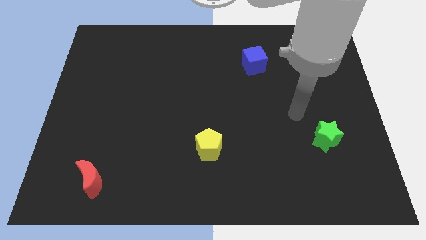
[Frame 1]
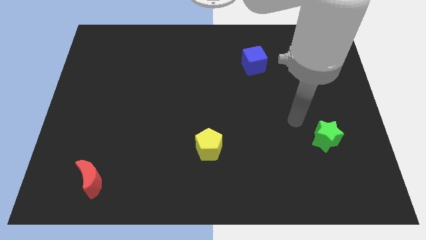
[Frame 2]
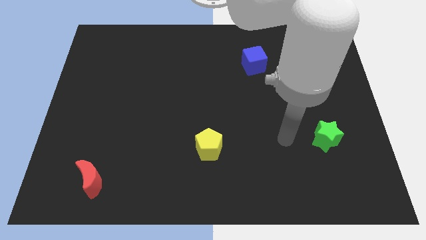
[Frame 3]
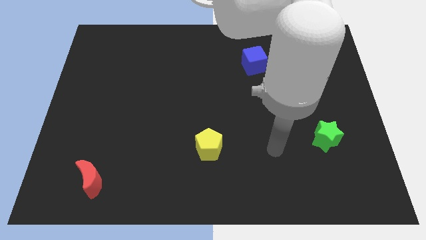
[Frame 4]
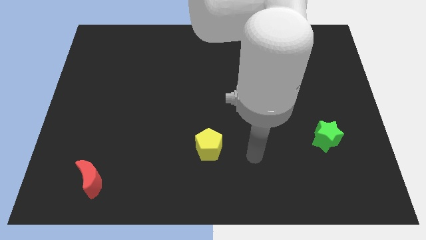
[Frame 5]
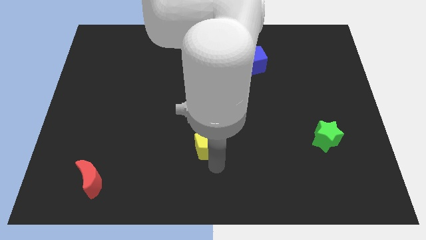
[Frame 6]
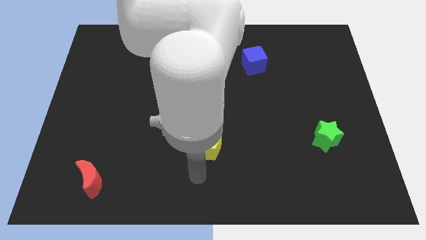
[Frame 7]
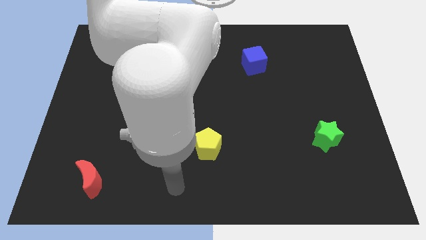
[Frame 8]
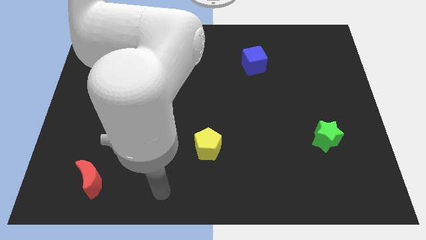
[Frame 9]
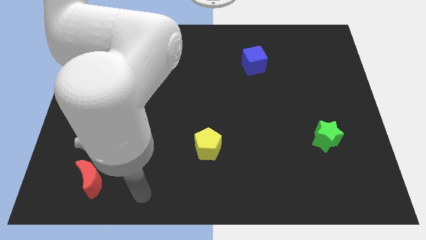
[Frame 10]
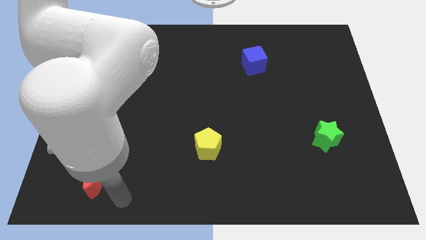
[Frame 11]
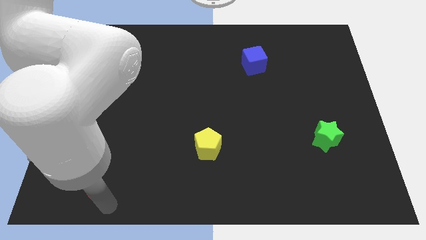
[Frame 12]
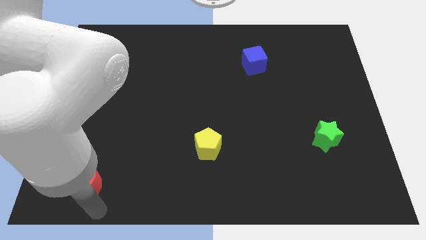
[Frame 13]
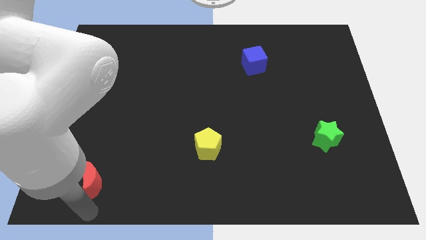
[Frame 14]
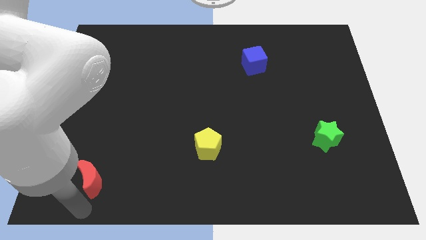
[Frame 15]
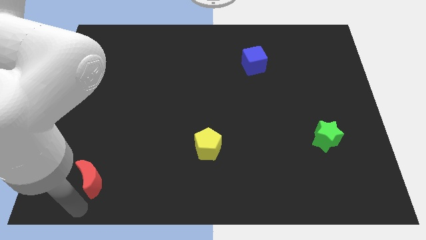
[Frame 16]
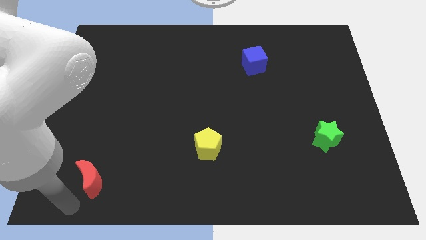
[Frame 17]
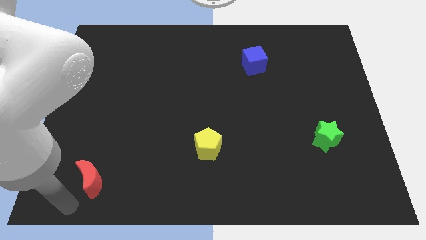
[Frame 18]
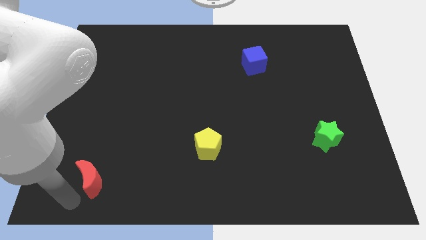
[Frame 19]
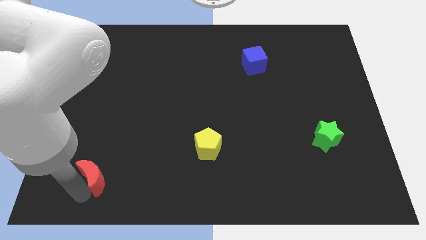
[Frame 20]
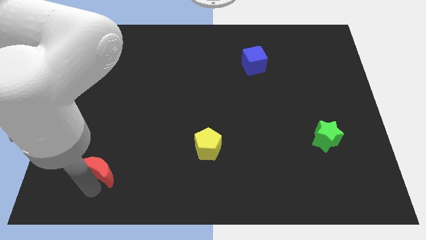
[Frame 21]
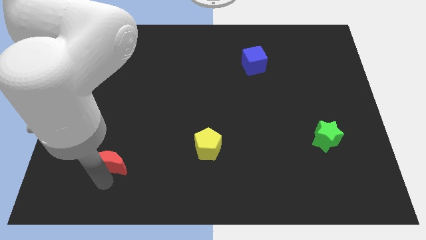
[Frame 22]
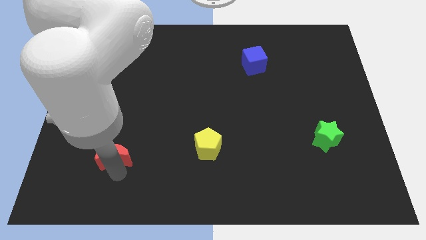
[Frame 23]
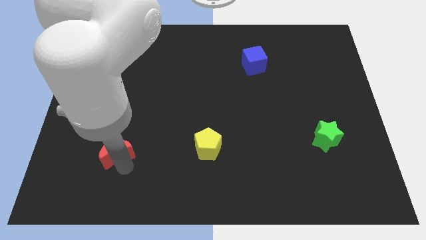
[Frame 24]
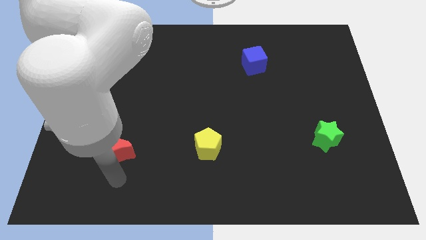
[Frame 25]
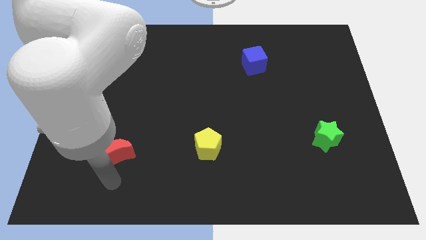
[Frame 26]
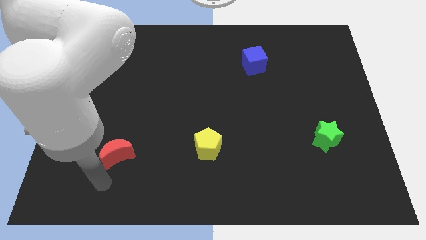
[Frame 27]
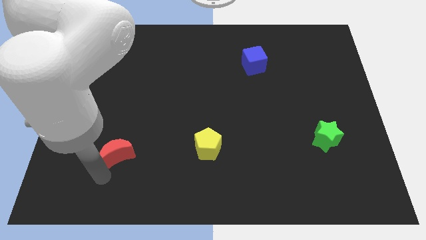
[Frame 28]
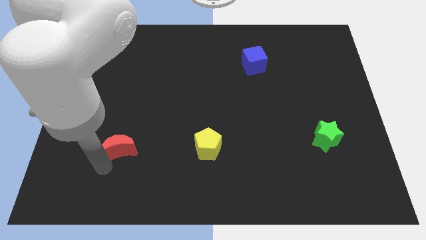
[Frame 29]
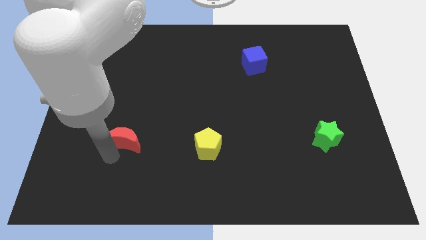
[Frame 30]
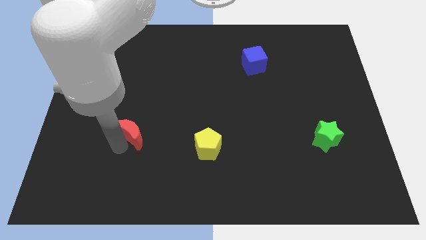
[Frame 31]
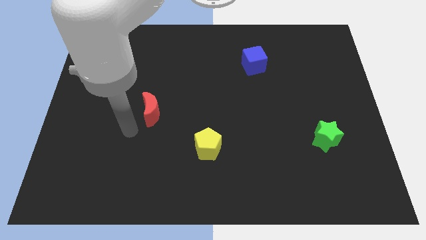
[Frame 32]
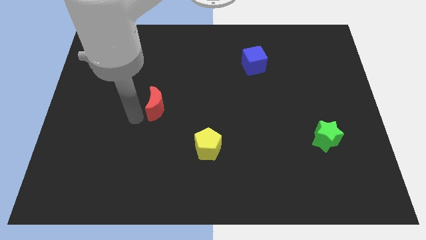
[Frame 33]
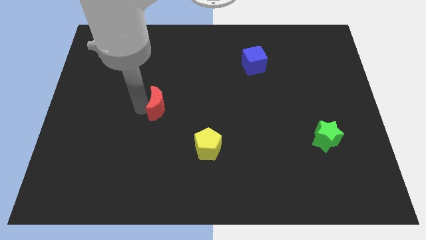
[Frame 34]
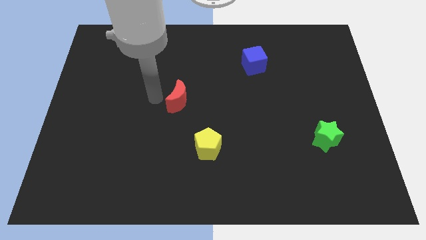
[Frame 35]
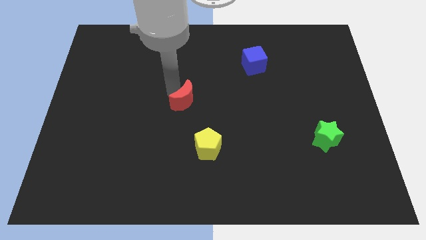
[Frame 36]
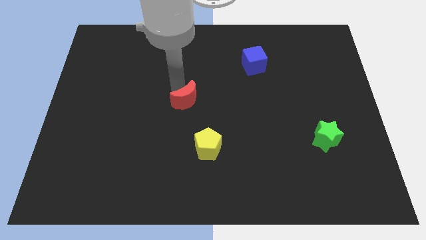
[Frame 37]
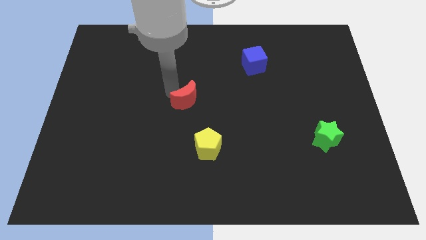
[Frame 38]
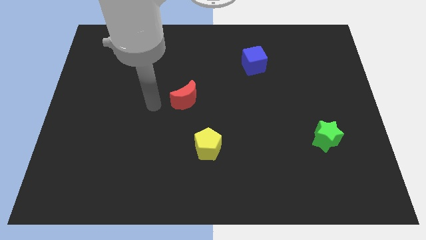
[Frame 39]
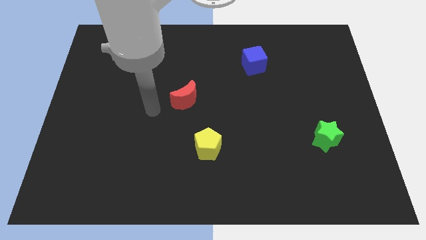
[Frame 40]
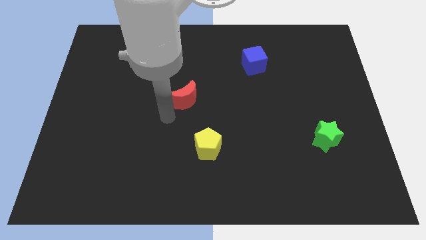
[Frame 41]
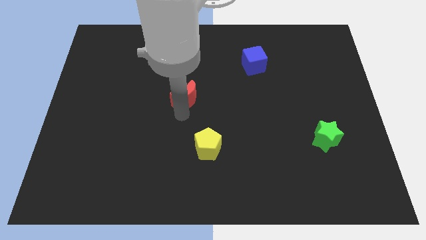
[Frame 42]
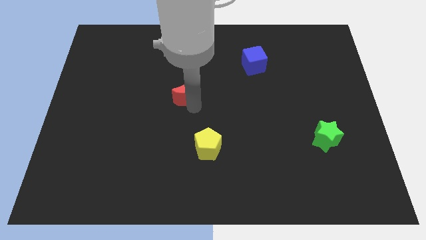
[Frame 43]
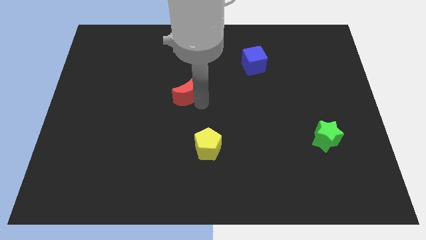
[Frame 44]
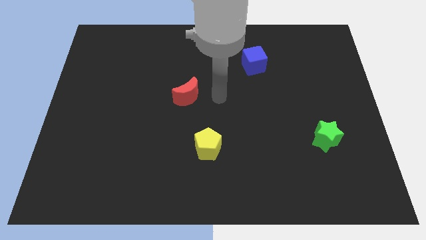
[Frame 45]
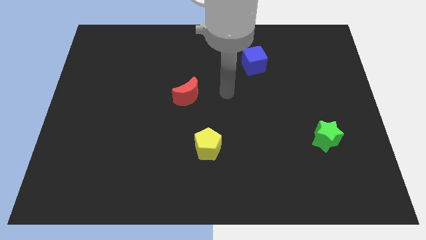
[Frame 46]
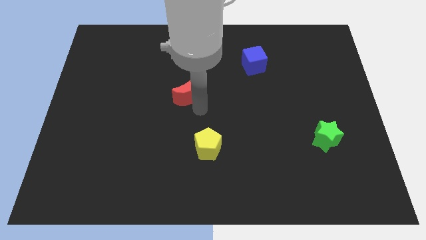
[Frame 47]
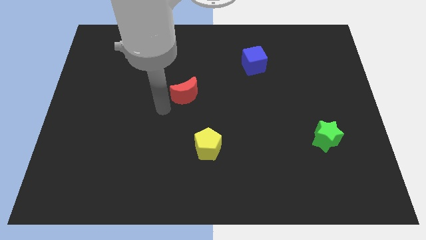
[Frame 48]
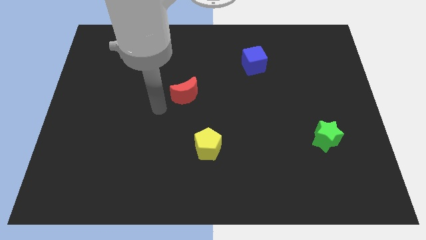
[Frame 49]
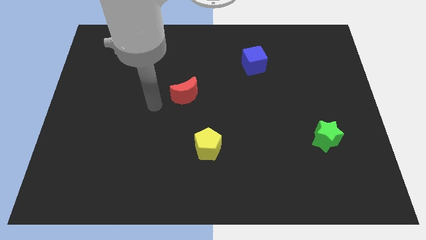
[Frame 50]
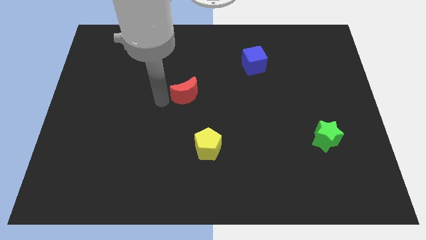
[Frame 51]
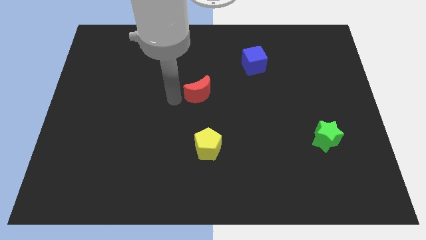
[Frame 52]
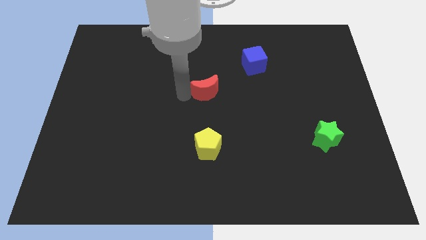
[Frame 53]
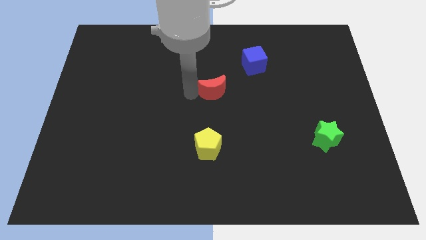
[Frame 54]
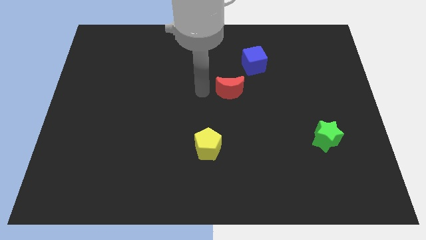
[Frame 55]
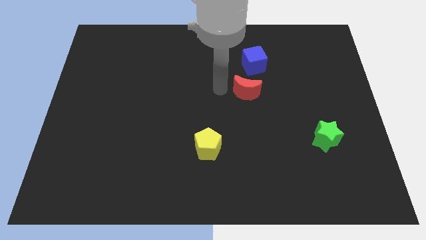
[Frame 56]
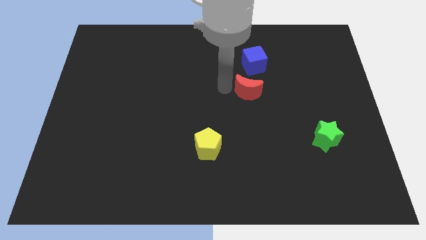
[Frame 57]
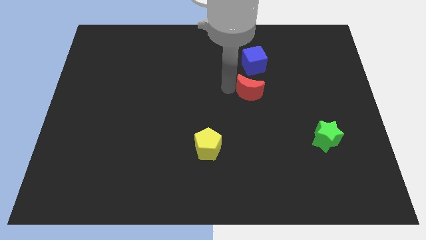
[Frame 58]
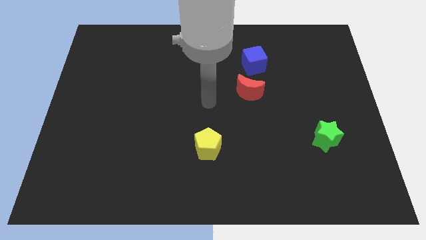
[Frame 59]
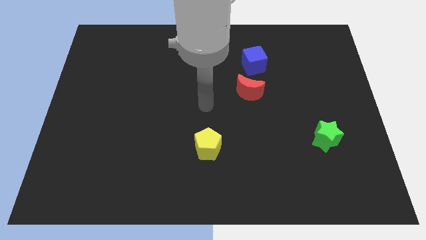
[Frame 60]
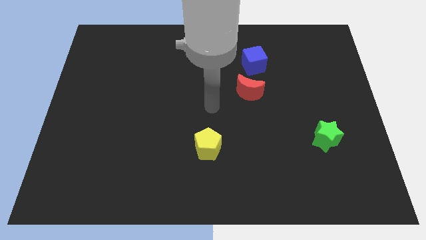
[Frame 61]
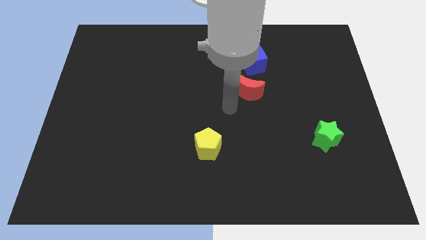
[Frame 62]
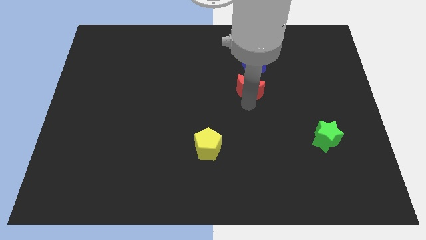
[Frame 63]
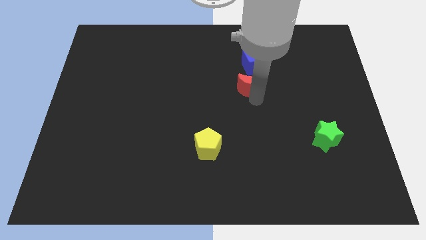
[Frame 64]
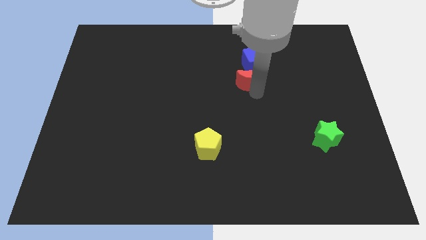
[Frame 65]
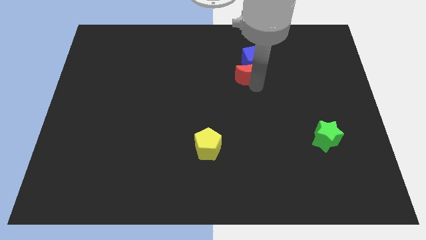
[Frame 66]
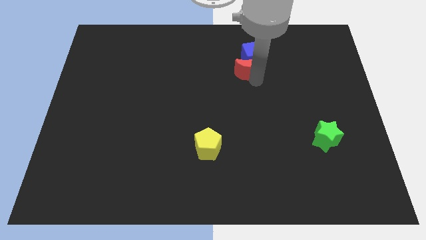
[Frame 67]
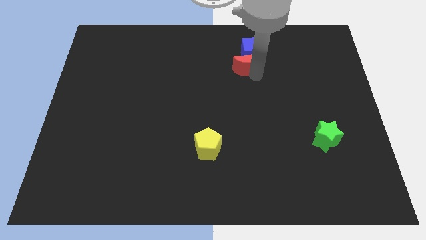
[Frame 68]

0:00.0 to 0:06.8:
put the red block to the blue block

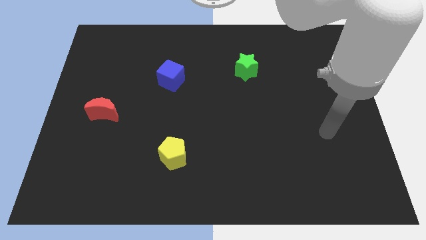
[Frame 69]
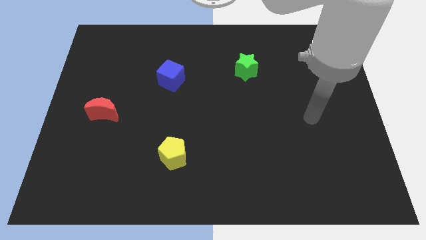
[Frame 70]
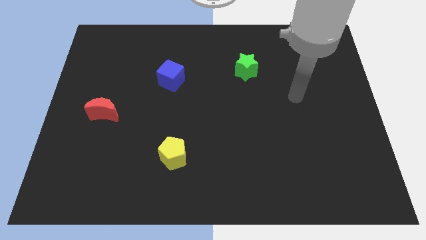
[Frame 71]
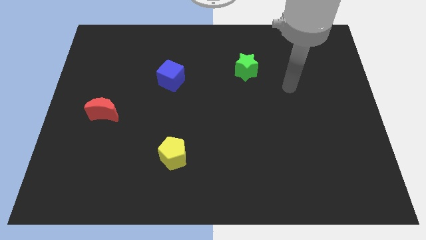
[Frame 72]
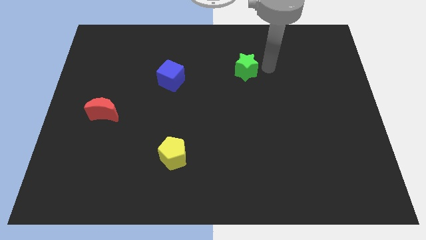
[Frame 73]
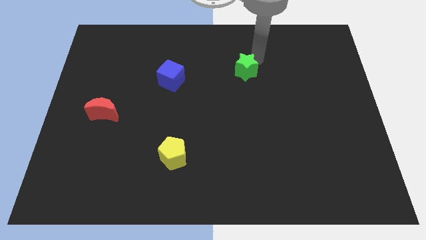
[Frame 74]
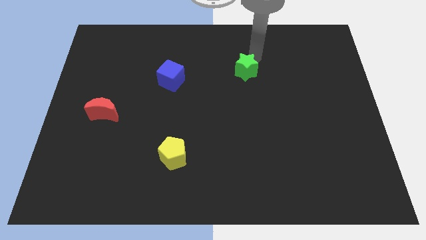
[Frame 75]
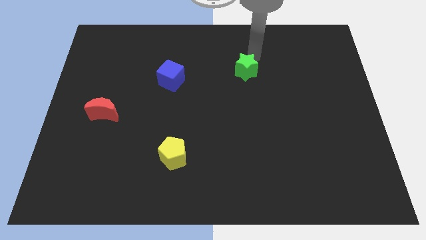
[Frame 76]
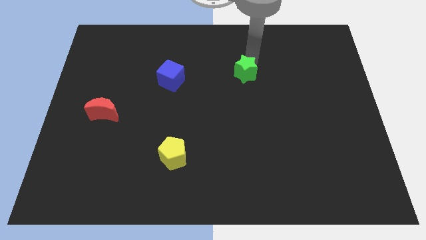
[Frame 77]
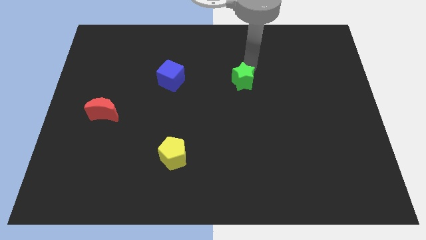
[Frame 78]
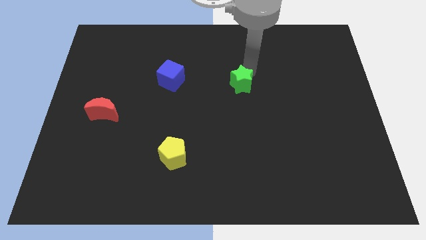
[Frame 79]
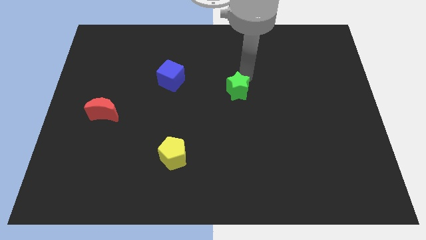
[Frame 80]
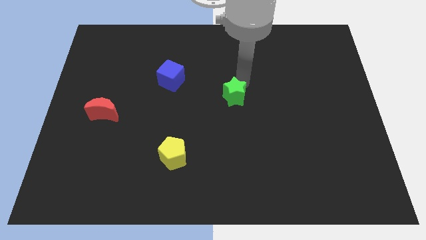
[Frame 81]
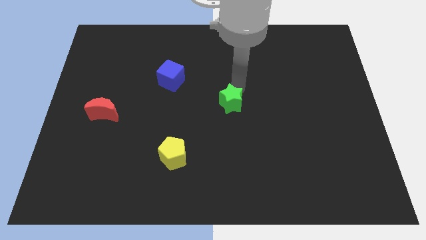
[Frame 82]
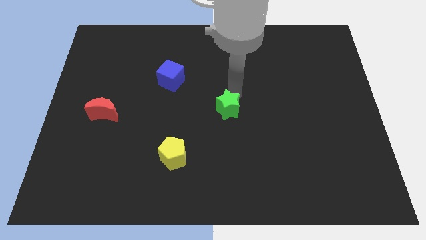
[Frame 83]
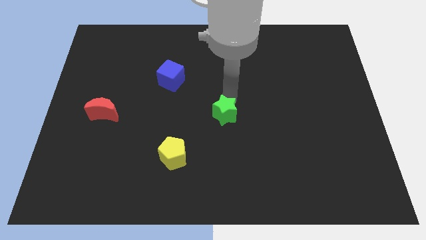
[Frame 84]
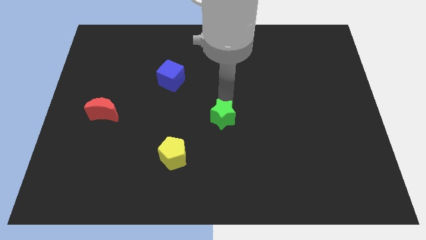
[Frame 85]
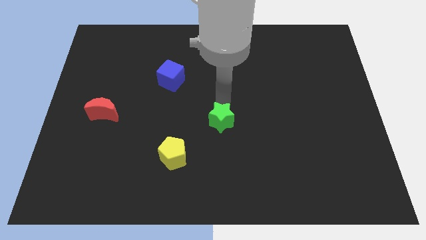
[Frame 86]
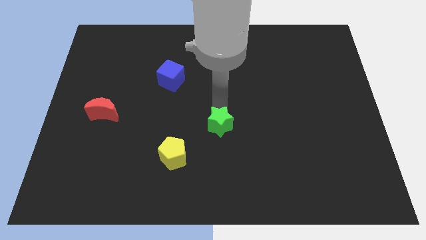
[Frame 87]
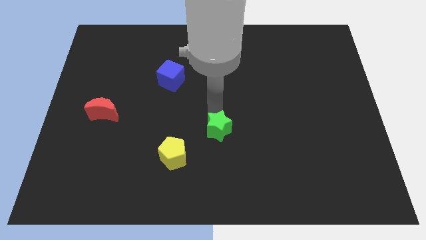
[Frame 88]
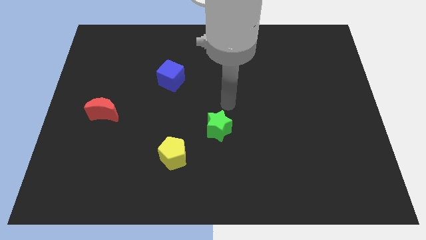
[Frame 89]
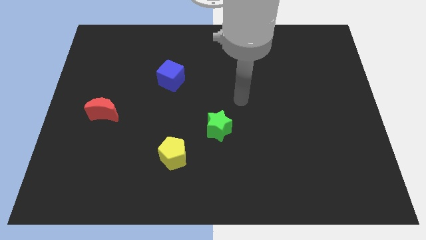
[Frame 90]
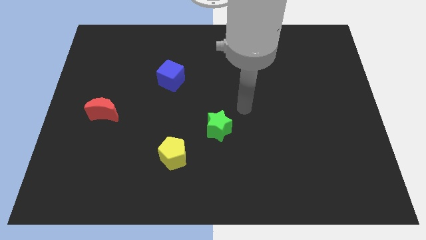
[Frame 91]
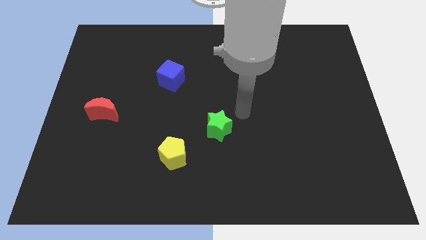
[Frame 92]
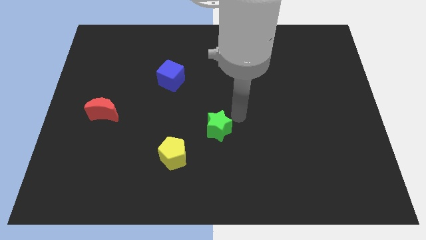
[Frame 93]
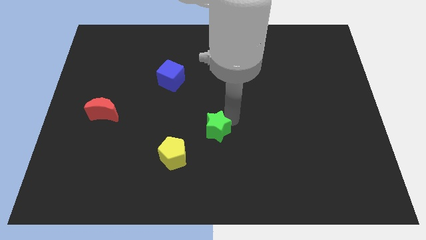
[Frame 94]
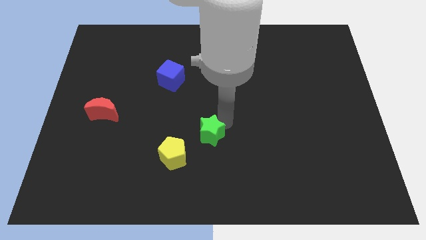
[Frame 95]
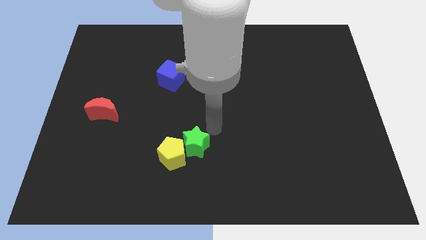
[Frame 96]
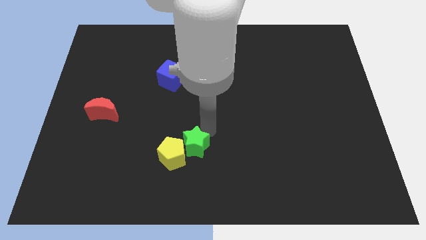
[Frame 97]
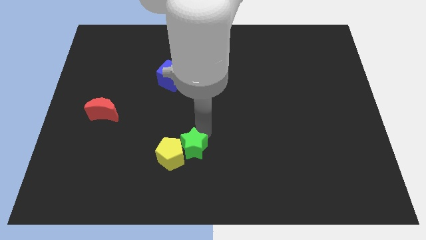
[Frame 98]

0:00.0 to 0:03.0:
move the green star towards the pentagon
